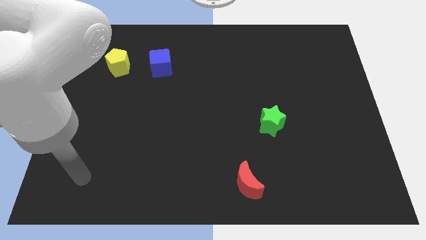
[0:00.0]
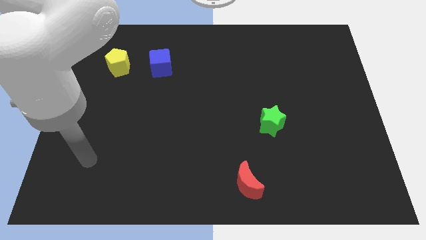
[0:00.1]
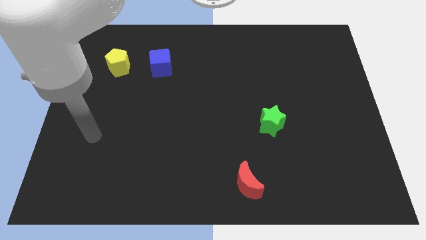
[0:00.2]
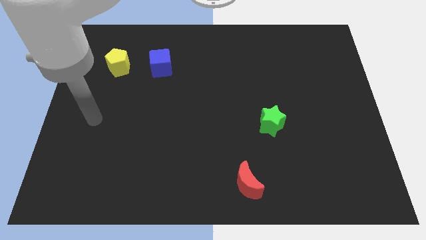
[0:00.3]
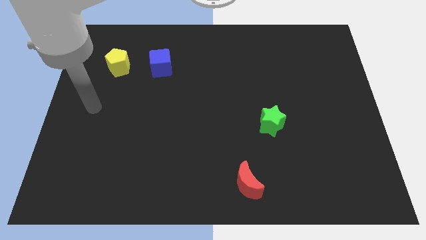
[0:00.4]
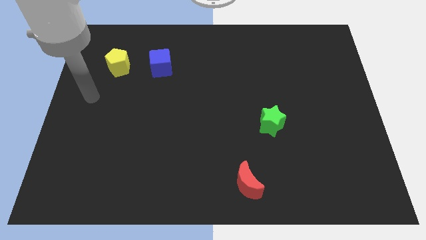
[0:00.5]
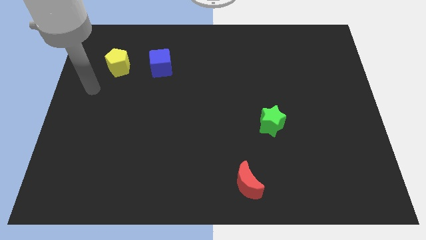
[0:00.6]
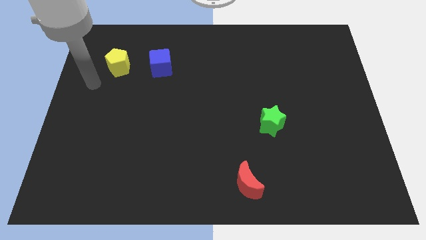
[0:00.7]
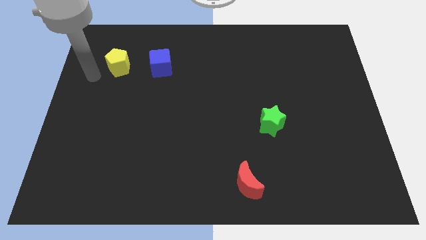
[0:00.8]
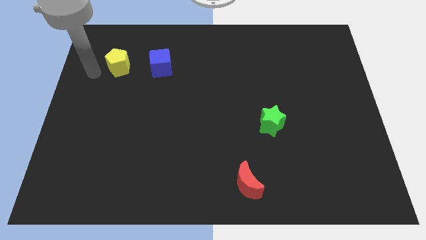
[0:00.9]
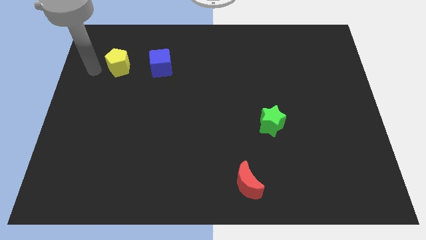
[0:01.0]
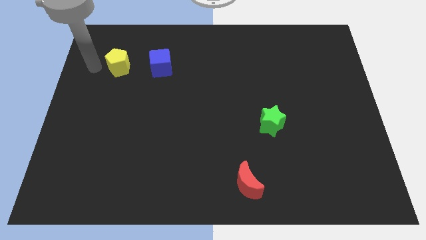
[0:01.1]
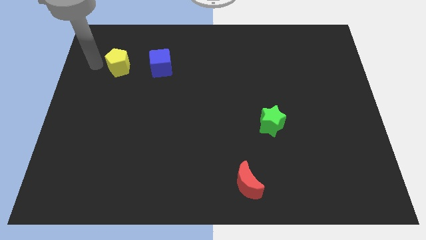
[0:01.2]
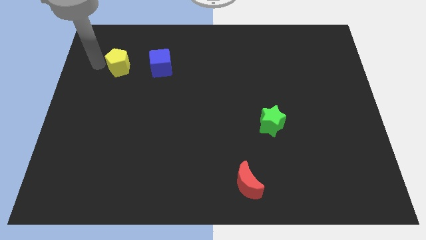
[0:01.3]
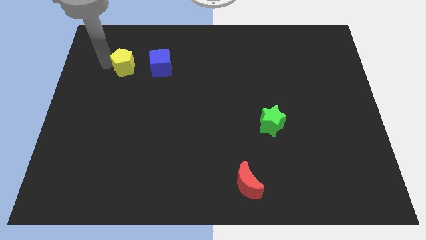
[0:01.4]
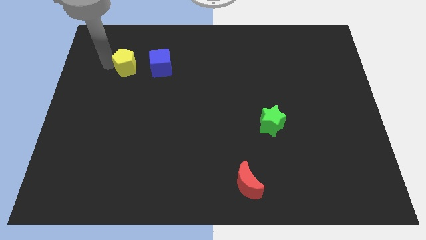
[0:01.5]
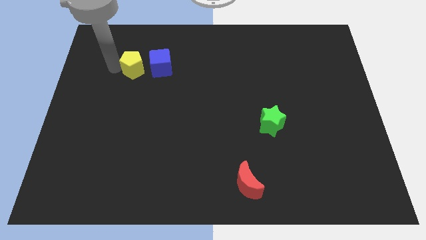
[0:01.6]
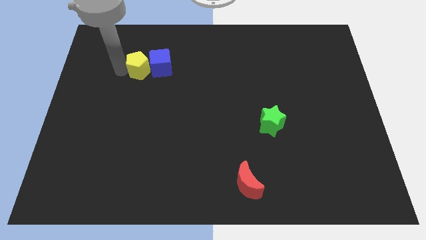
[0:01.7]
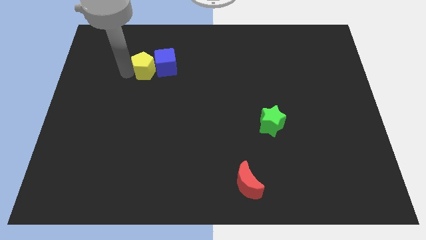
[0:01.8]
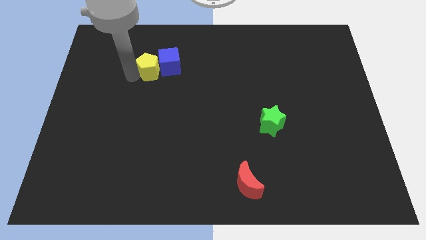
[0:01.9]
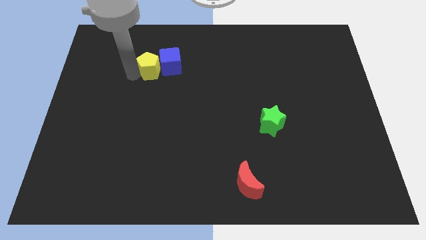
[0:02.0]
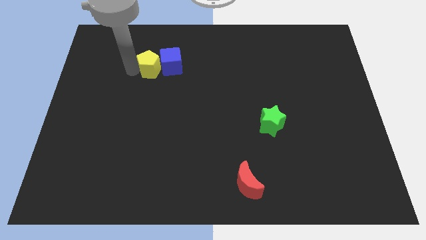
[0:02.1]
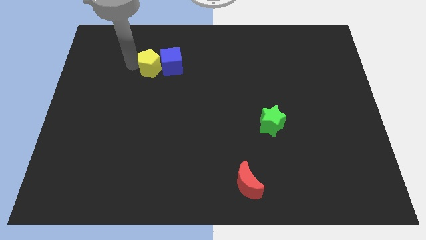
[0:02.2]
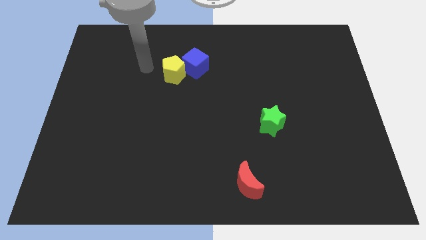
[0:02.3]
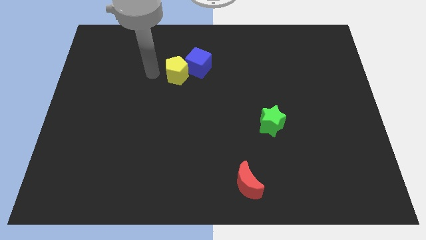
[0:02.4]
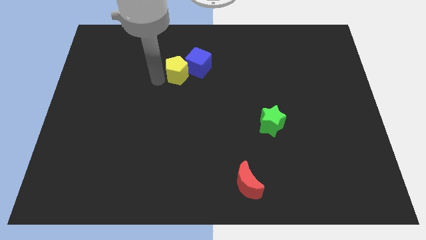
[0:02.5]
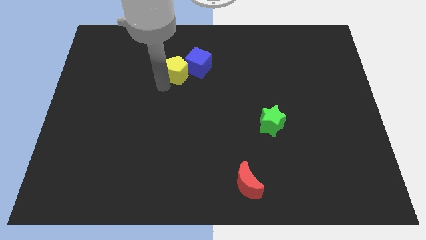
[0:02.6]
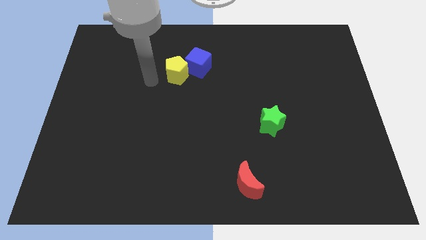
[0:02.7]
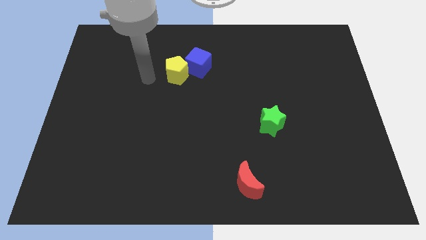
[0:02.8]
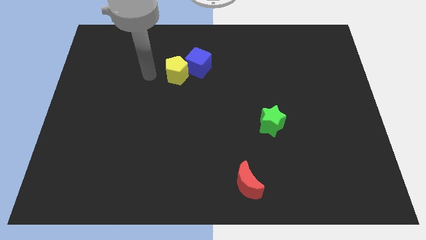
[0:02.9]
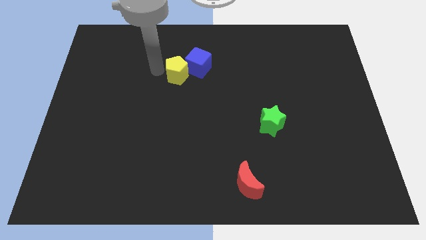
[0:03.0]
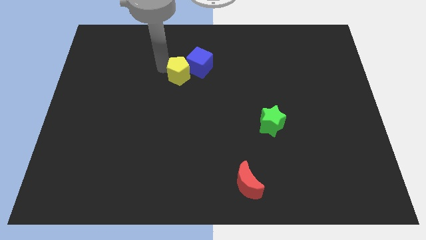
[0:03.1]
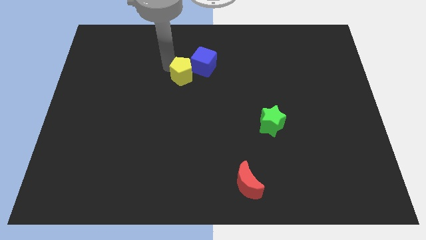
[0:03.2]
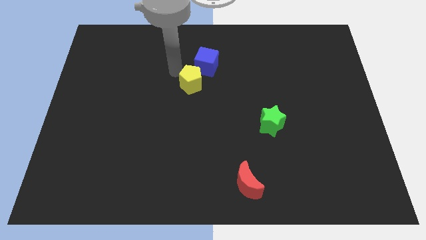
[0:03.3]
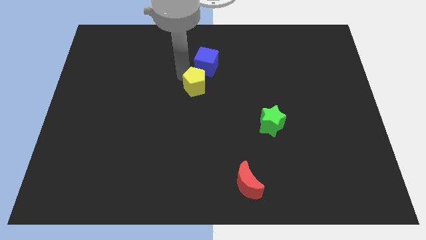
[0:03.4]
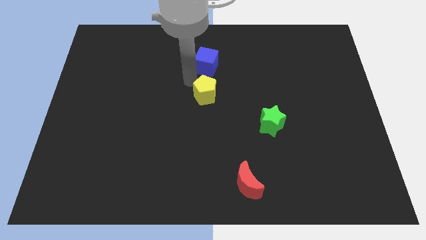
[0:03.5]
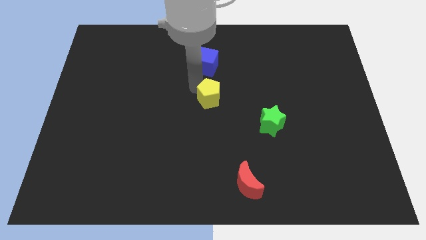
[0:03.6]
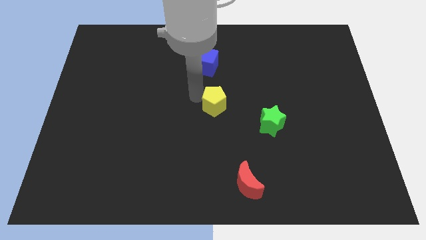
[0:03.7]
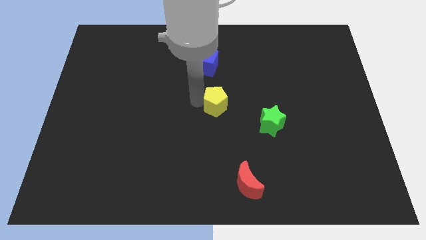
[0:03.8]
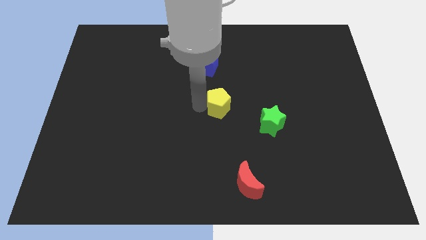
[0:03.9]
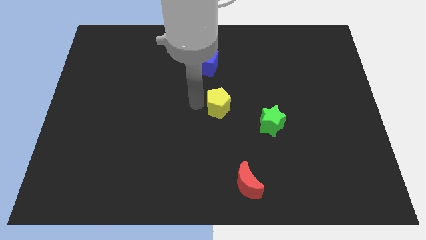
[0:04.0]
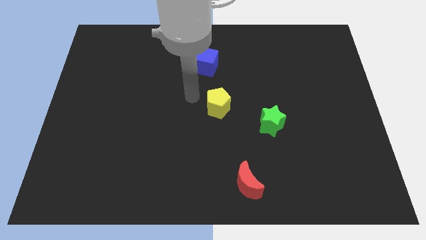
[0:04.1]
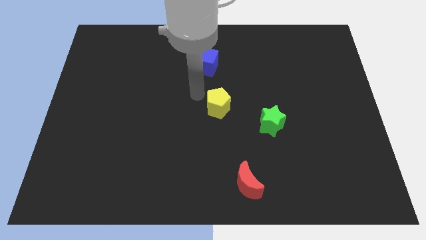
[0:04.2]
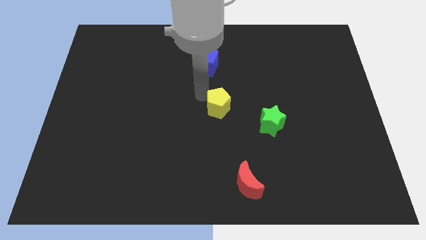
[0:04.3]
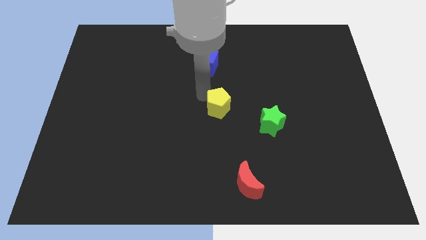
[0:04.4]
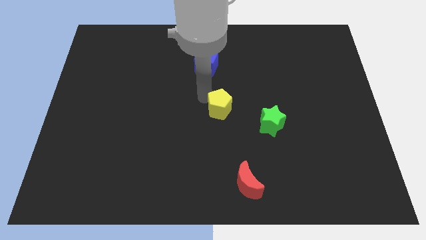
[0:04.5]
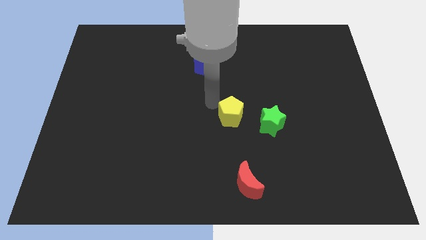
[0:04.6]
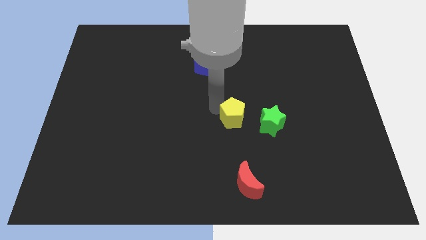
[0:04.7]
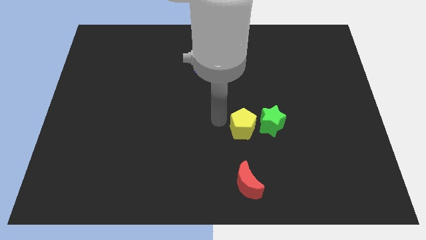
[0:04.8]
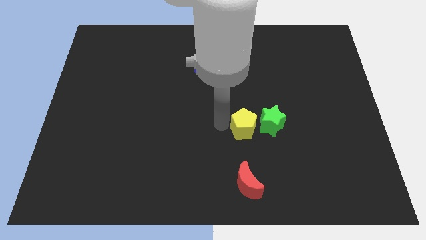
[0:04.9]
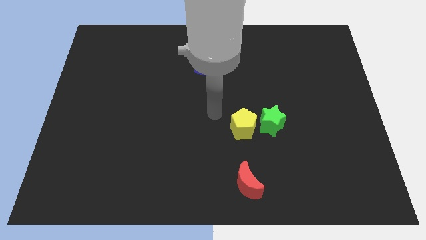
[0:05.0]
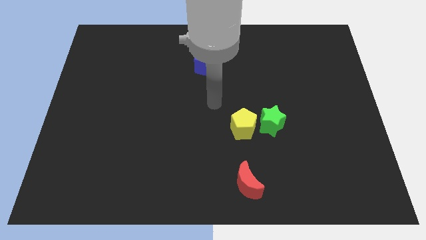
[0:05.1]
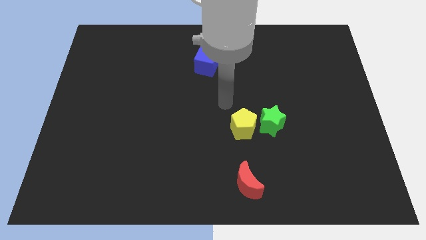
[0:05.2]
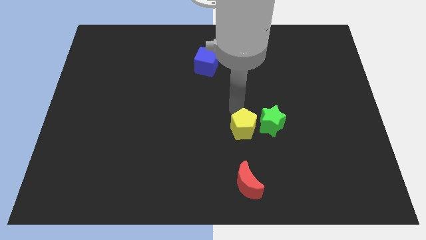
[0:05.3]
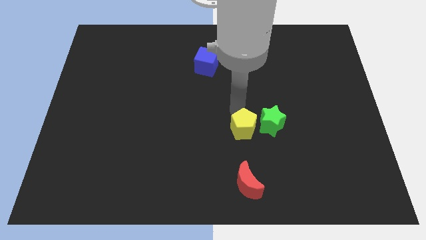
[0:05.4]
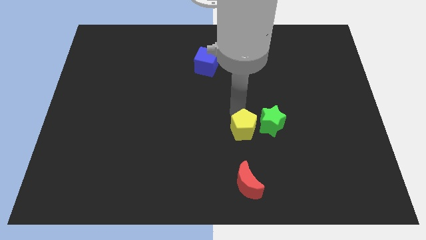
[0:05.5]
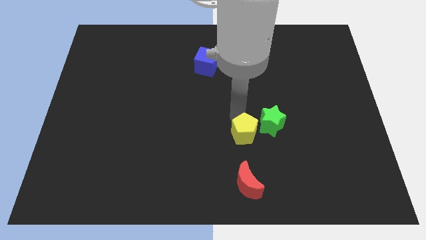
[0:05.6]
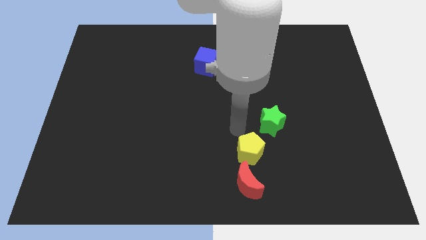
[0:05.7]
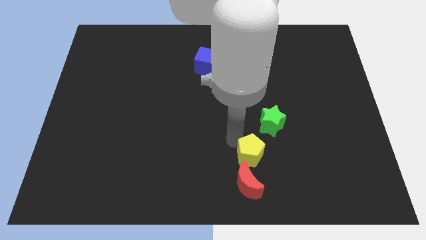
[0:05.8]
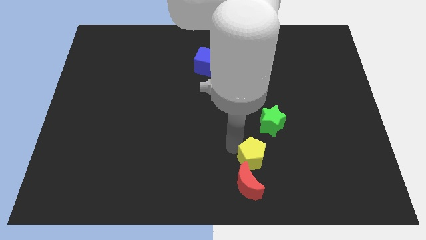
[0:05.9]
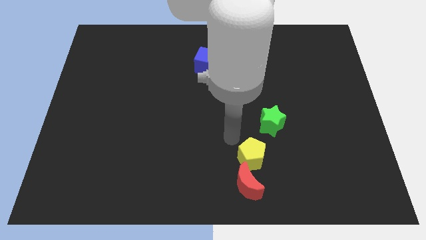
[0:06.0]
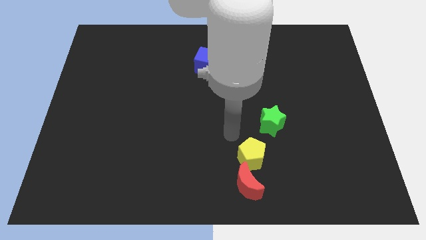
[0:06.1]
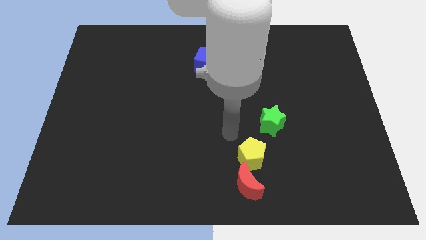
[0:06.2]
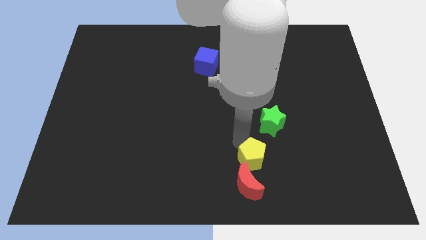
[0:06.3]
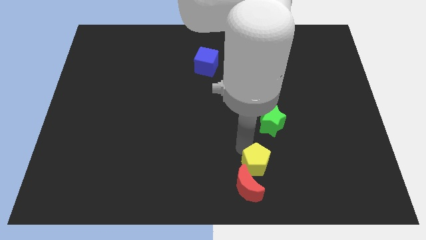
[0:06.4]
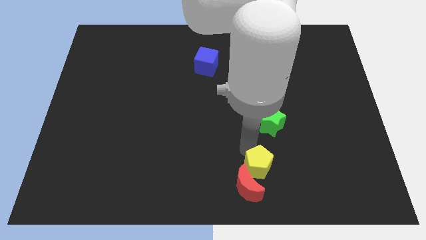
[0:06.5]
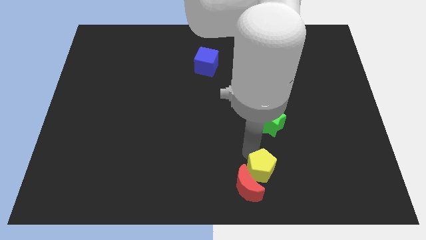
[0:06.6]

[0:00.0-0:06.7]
push the yellow pentagon towards the red moon

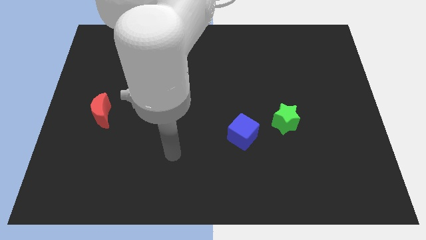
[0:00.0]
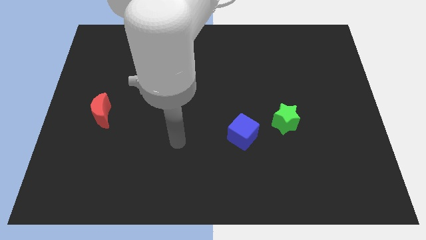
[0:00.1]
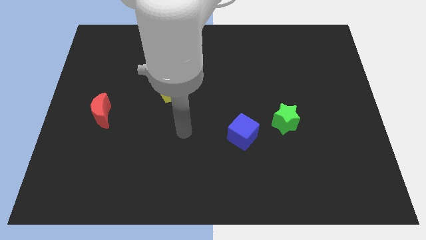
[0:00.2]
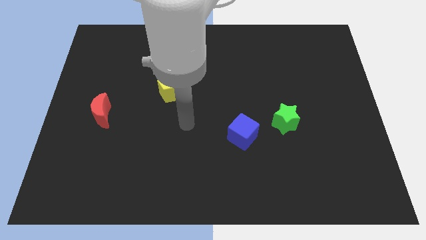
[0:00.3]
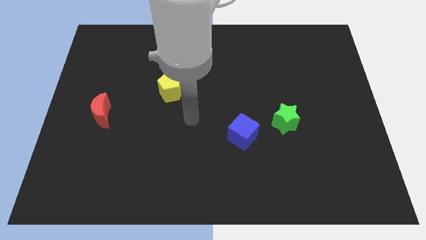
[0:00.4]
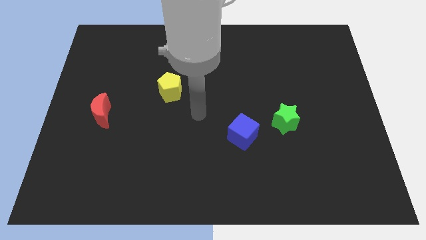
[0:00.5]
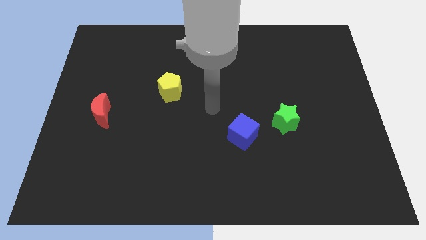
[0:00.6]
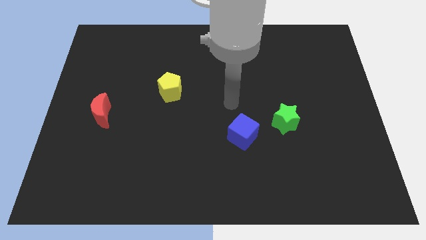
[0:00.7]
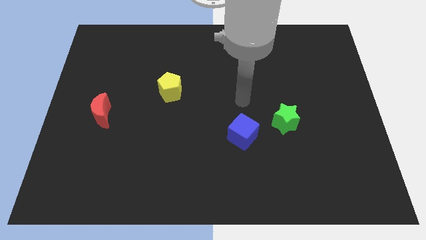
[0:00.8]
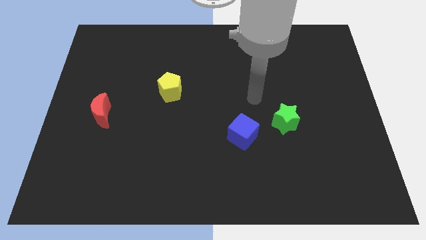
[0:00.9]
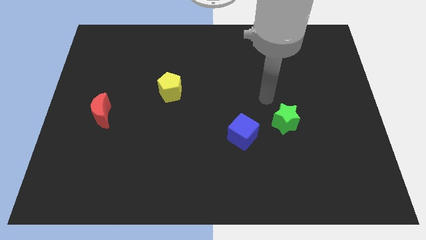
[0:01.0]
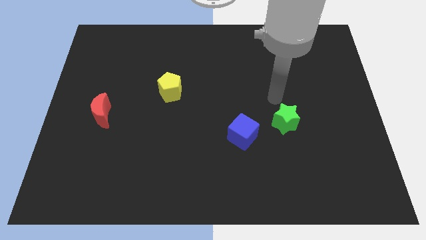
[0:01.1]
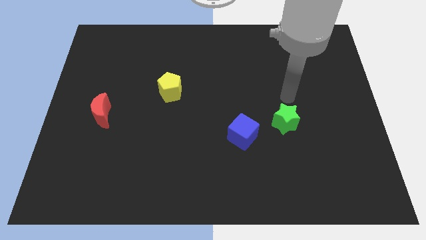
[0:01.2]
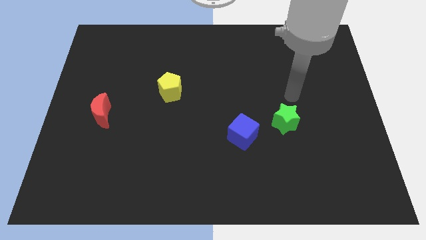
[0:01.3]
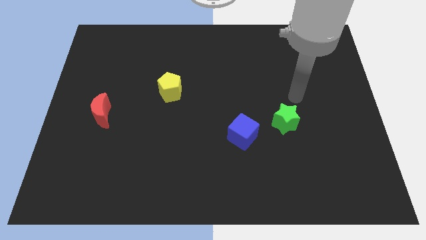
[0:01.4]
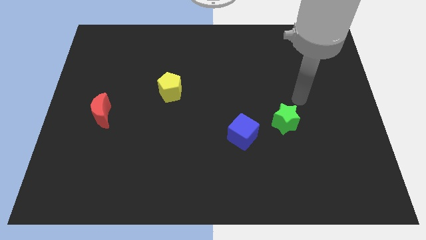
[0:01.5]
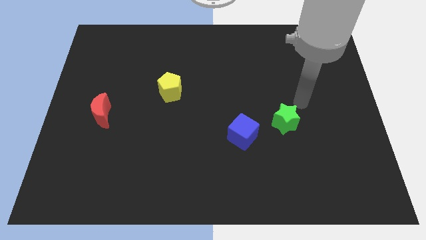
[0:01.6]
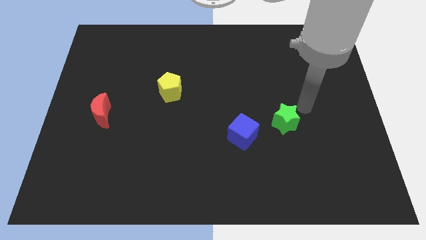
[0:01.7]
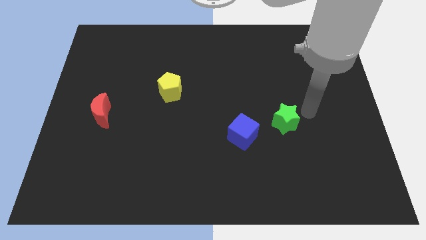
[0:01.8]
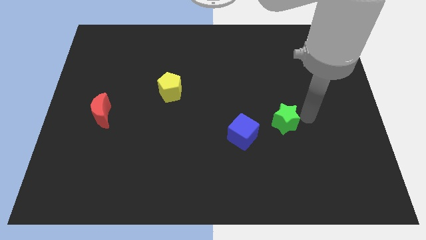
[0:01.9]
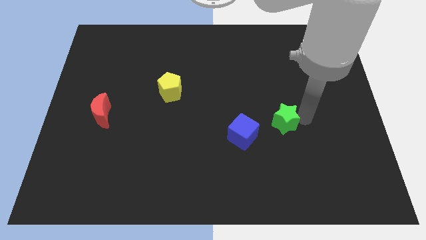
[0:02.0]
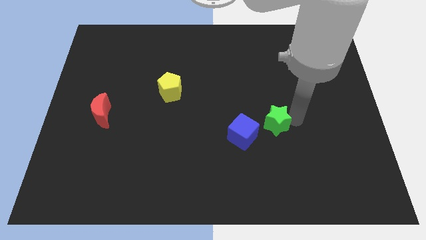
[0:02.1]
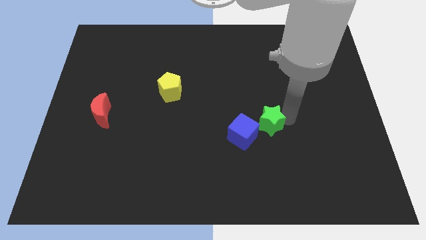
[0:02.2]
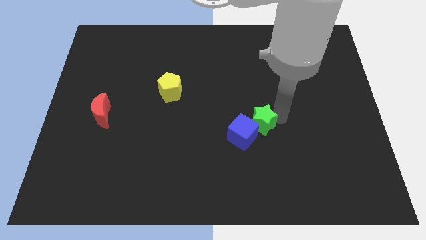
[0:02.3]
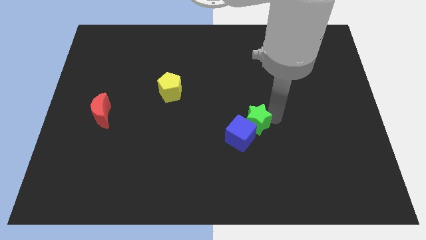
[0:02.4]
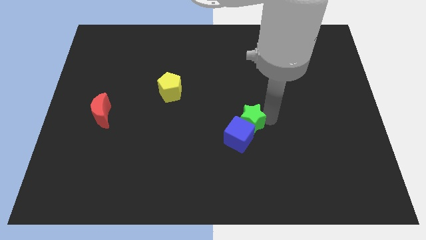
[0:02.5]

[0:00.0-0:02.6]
slide the star next to the cube
